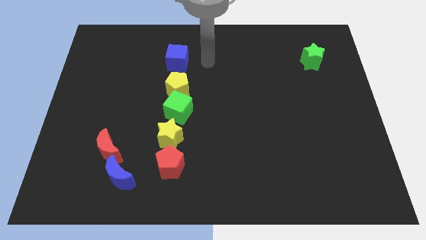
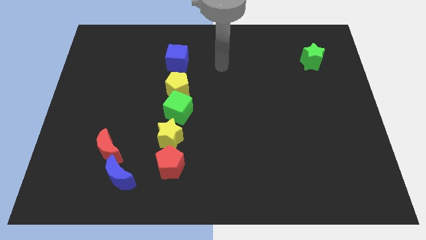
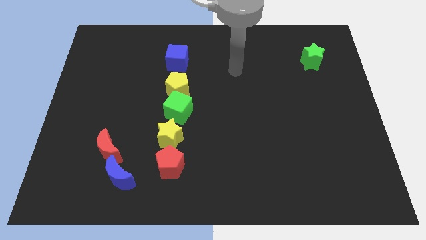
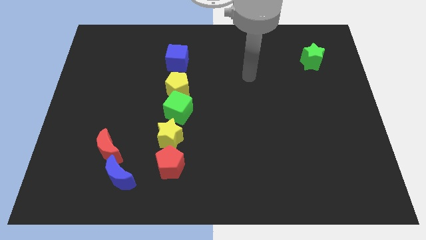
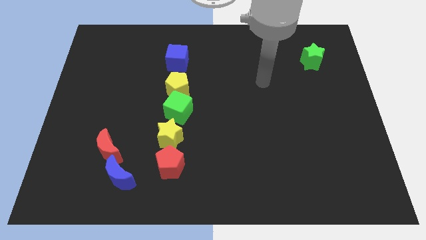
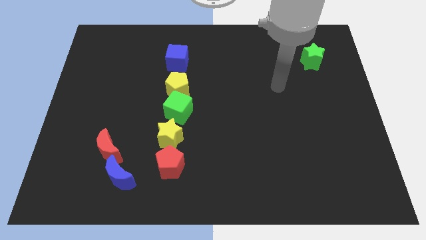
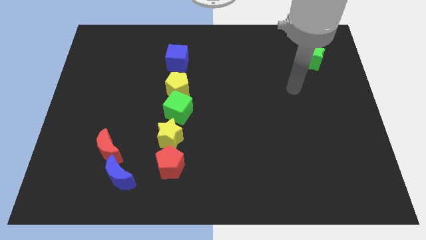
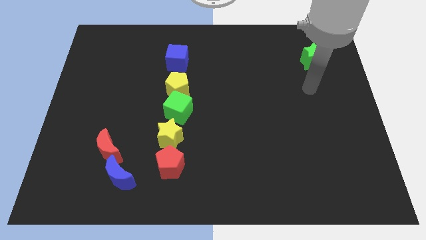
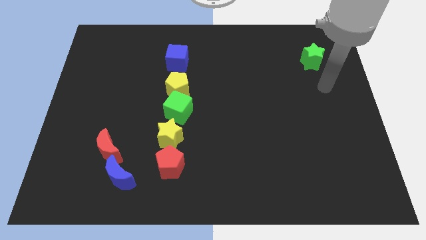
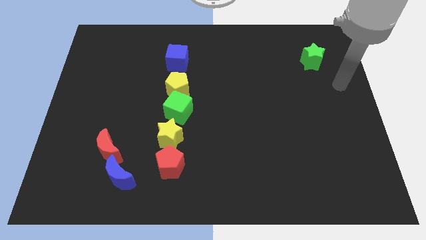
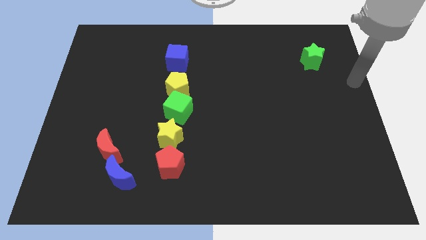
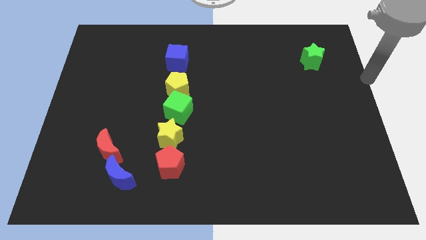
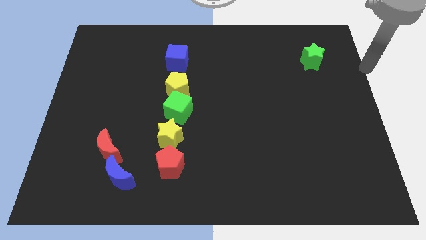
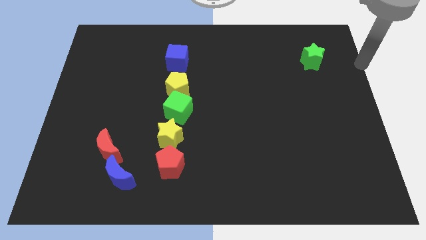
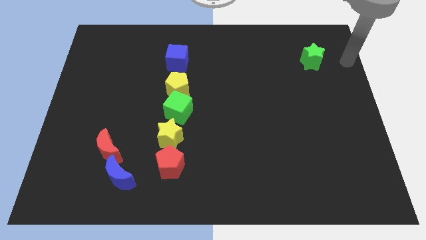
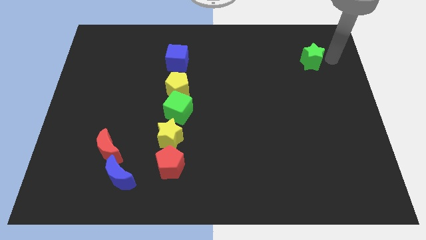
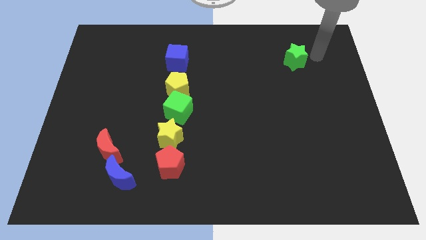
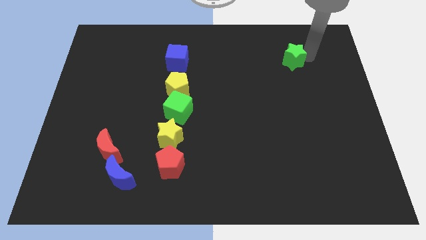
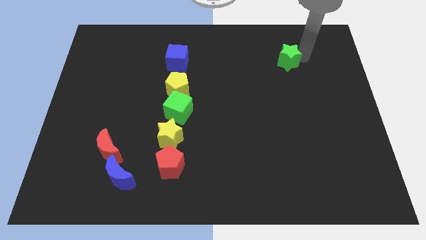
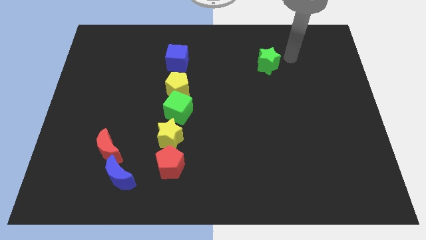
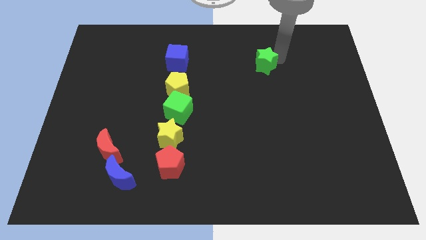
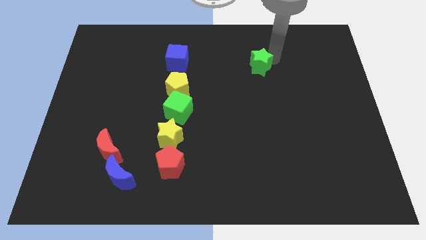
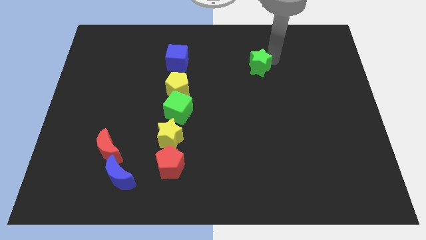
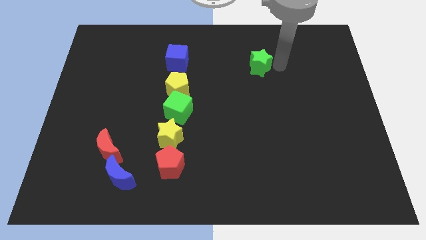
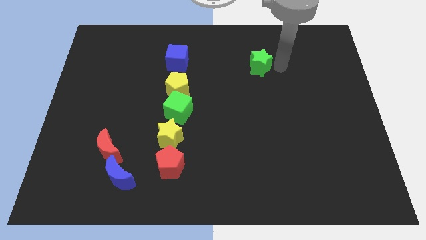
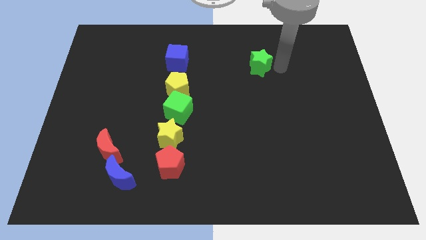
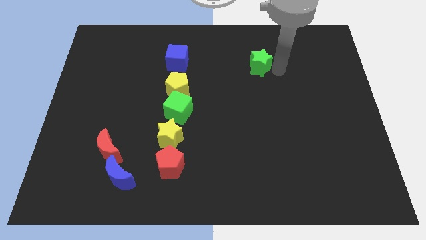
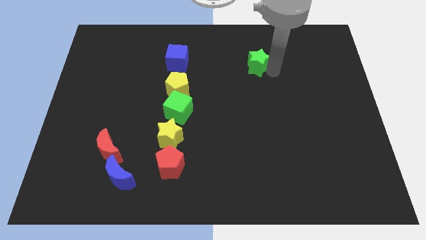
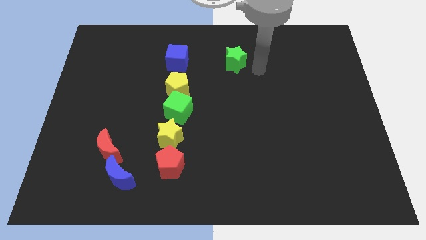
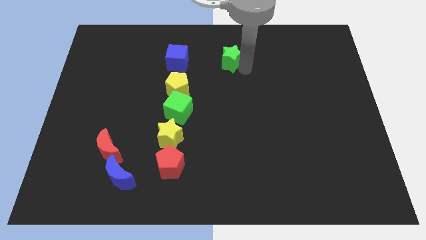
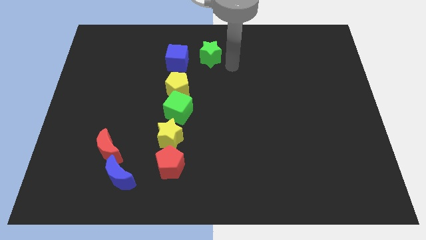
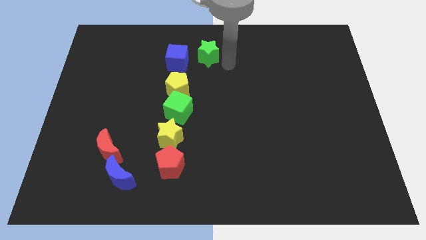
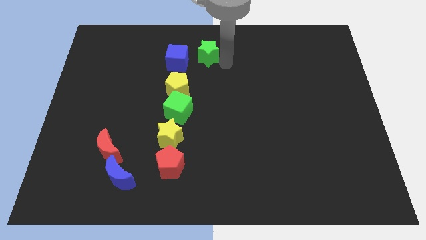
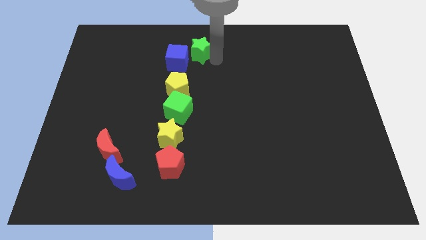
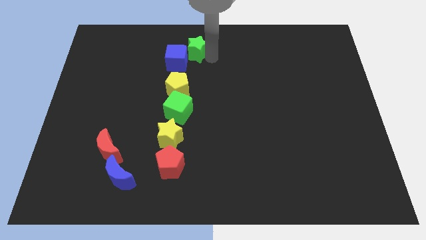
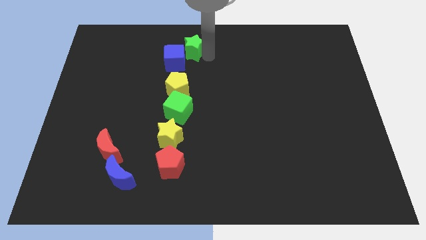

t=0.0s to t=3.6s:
push the green star into the blue cube

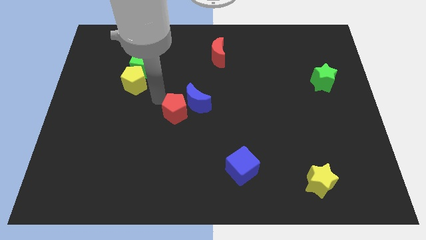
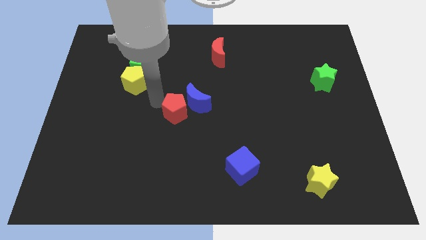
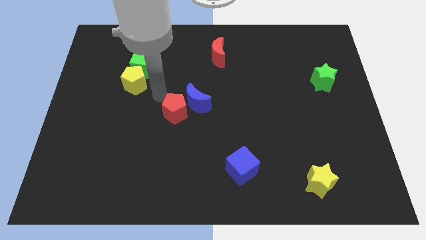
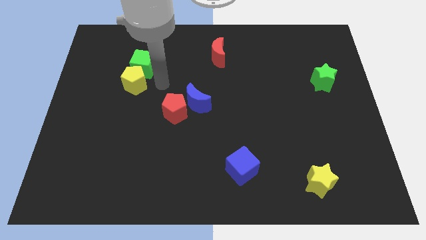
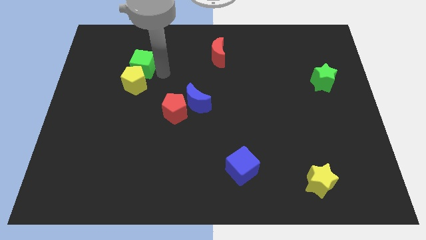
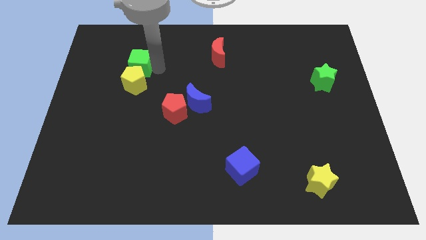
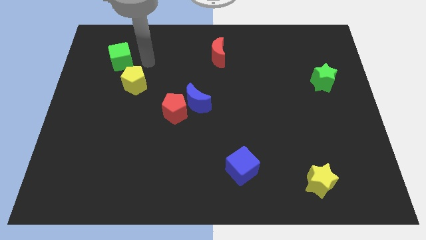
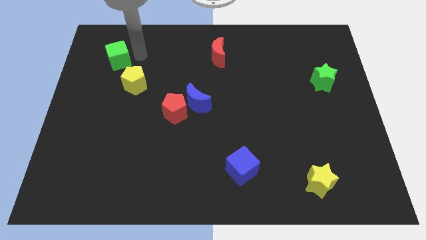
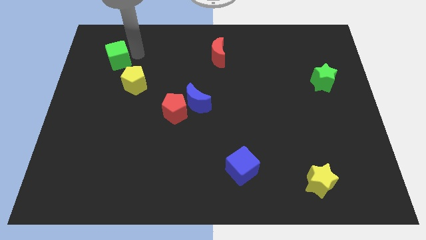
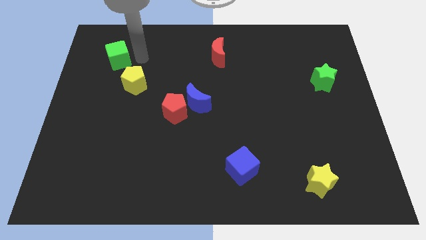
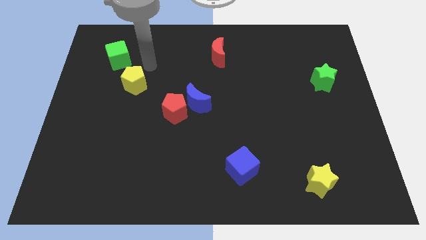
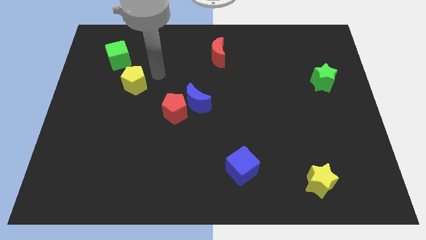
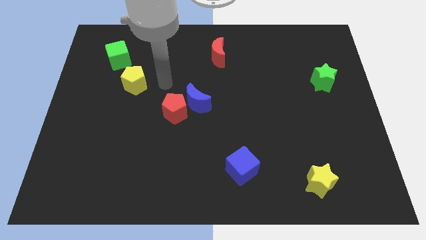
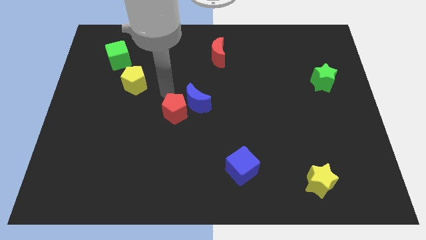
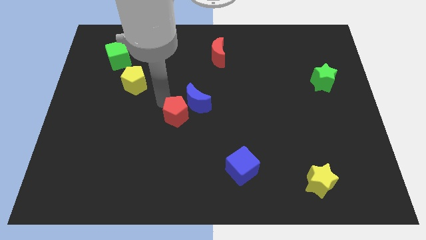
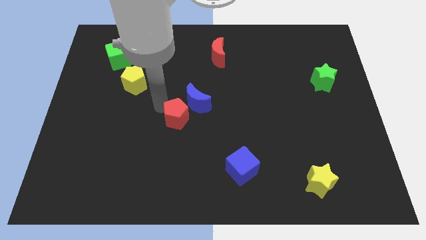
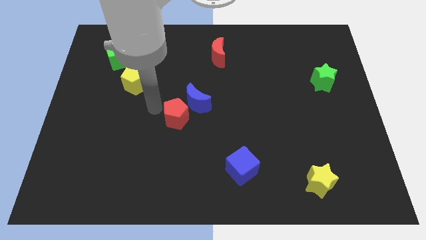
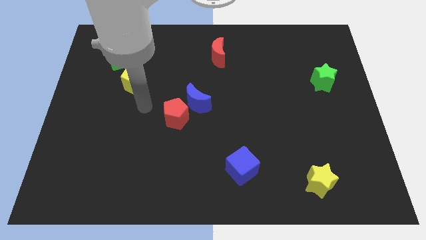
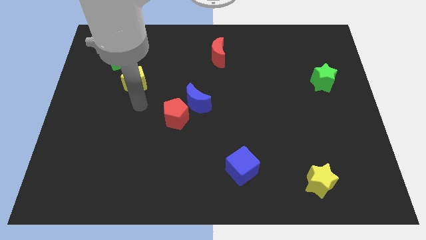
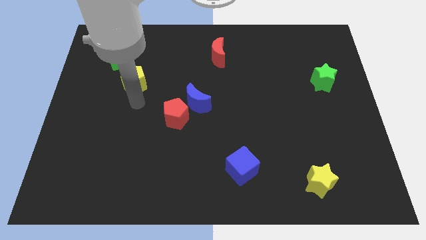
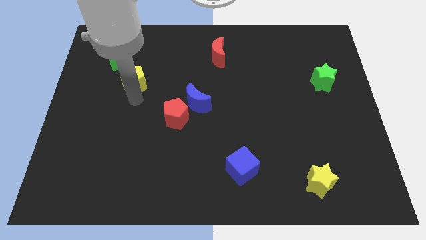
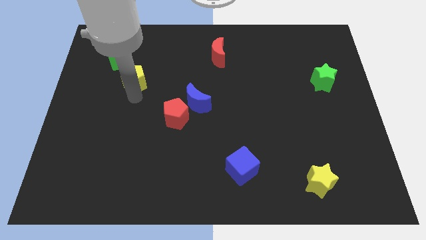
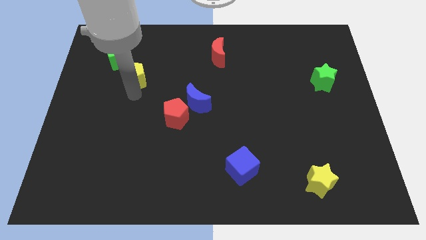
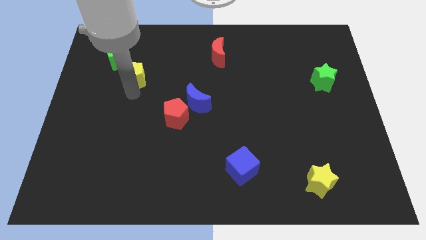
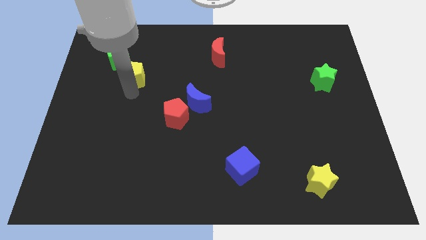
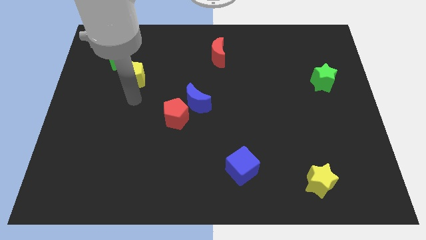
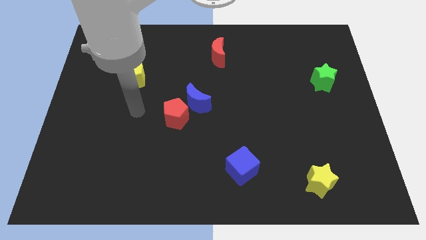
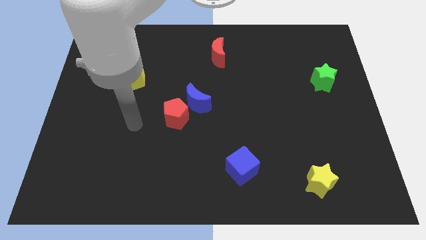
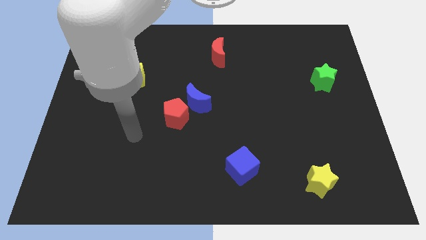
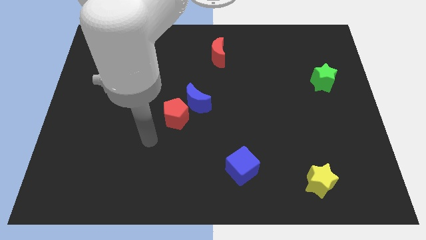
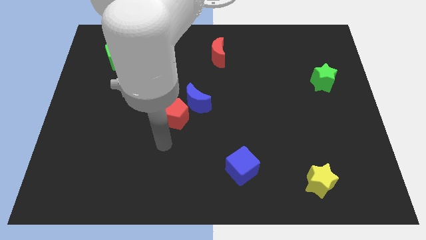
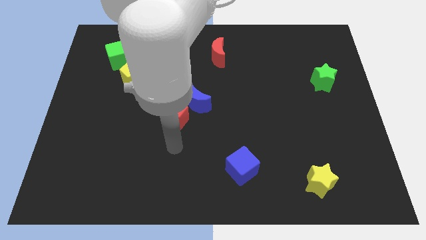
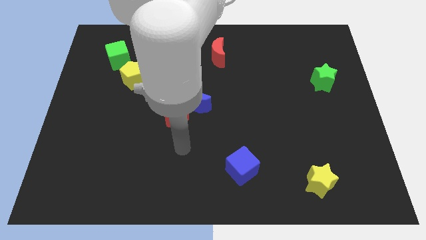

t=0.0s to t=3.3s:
move the green cube and yellow pentagon diagonal to each other

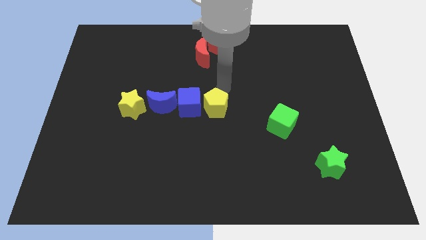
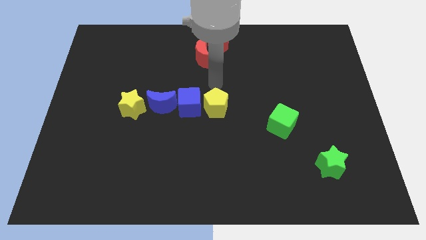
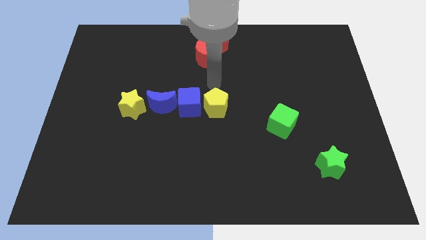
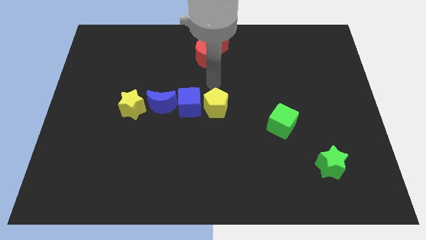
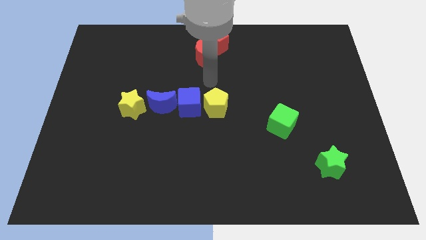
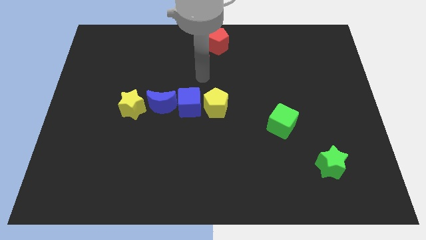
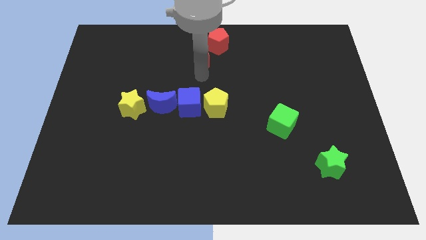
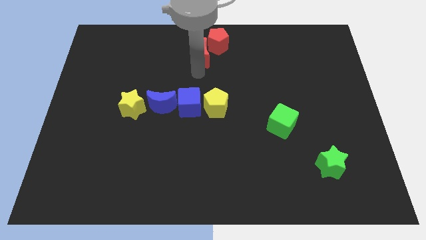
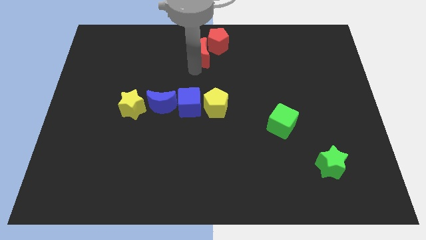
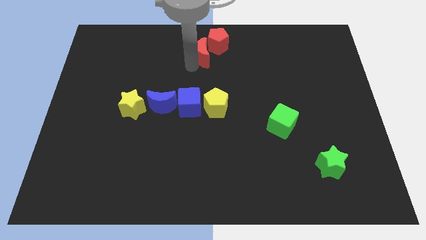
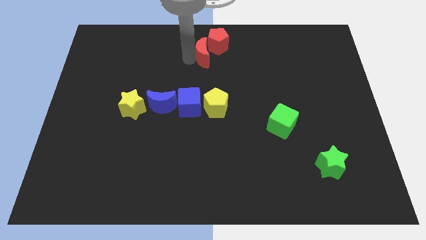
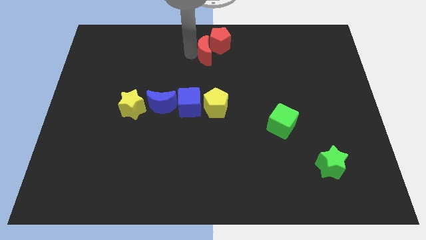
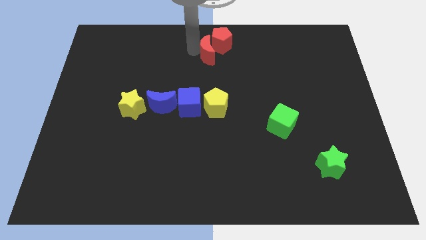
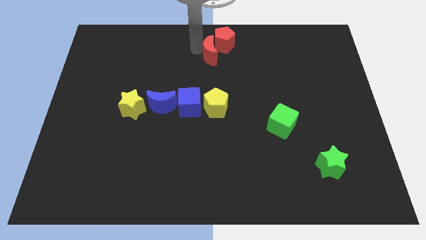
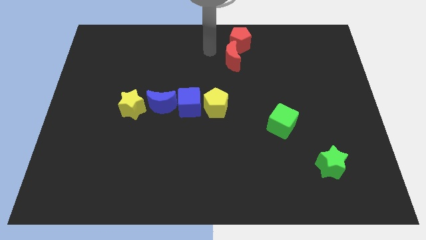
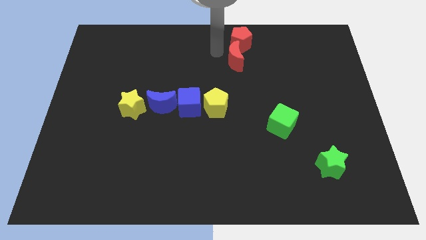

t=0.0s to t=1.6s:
place the red crescent vertically below the red pentagon

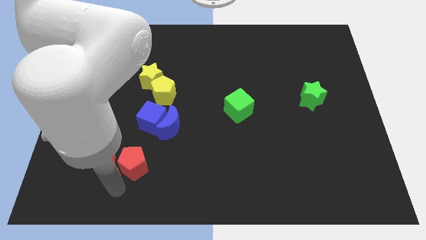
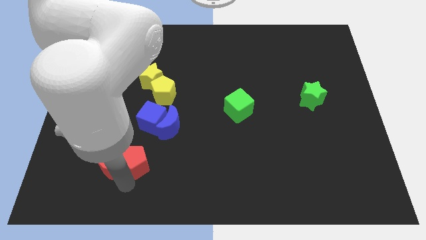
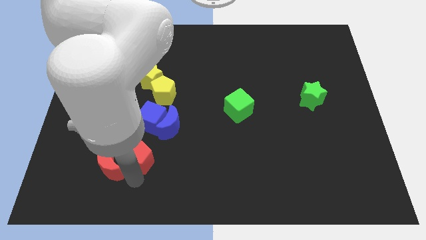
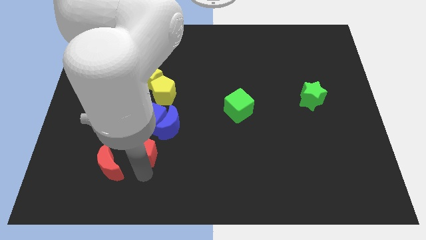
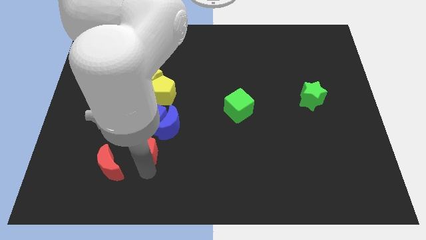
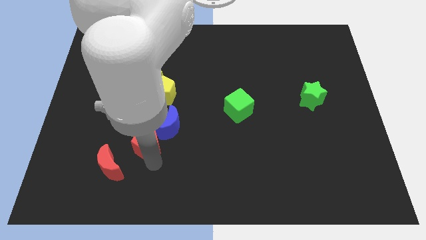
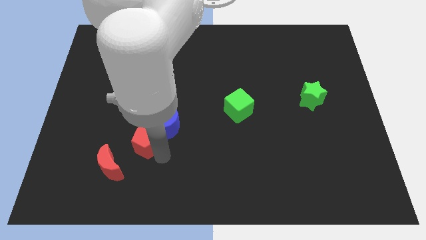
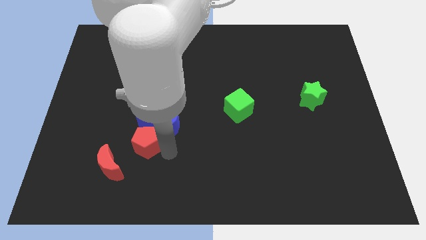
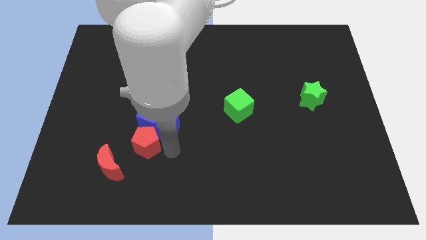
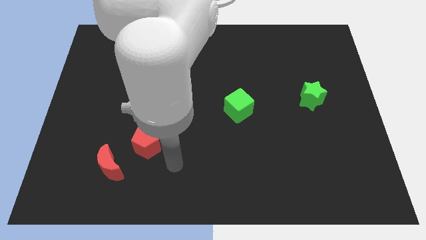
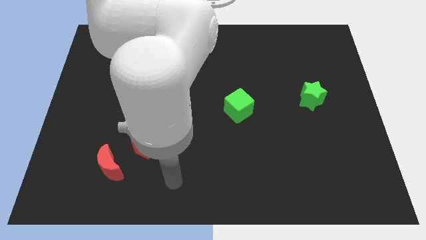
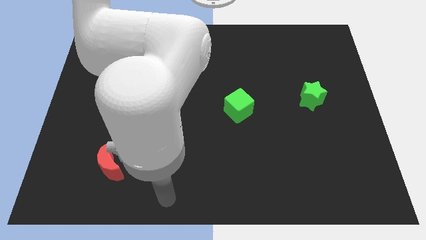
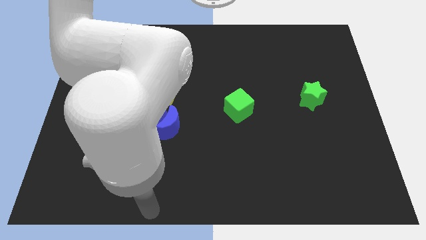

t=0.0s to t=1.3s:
push the red pentagon into the blue blocks
